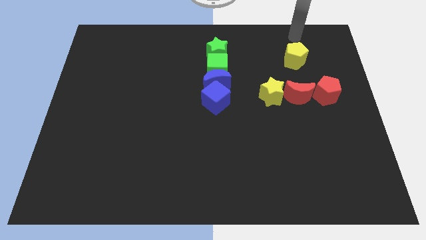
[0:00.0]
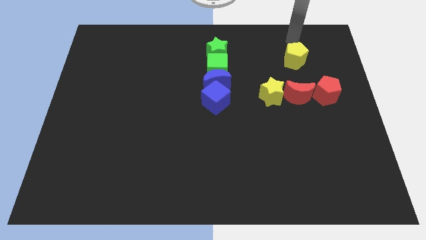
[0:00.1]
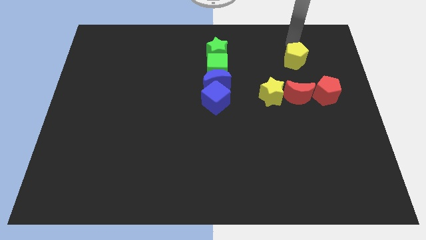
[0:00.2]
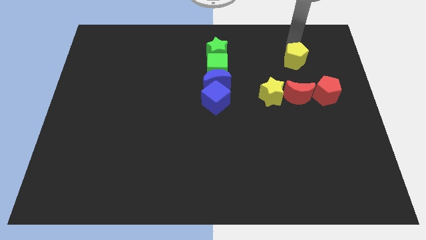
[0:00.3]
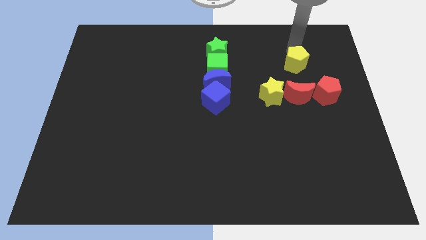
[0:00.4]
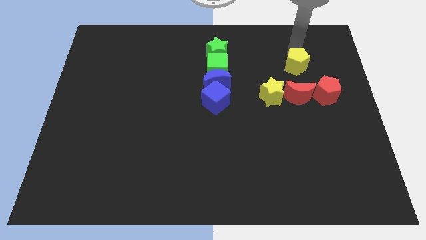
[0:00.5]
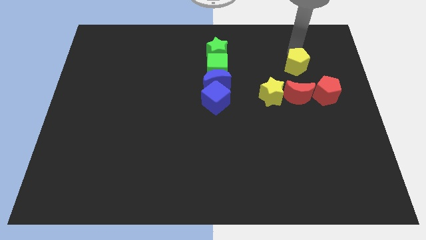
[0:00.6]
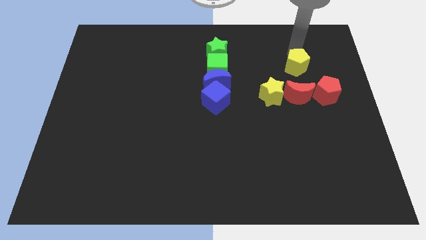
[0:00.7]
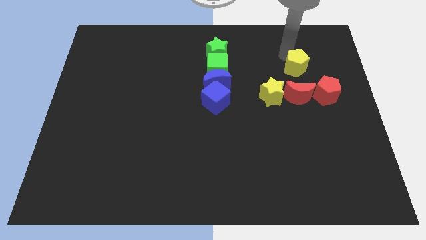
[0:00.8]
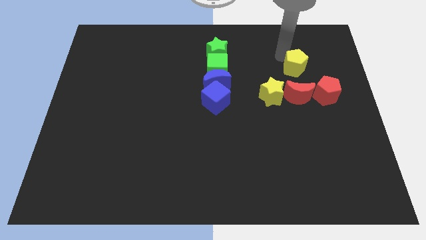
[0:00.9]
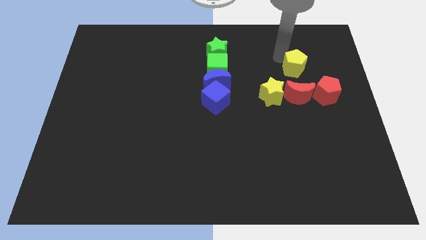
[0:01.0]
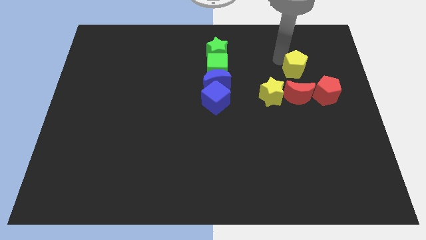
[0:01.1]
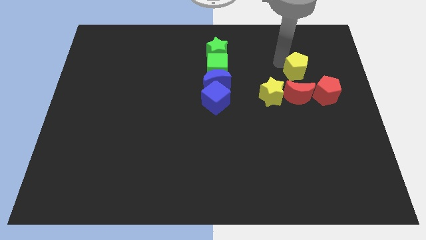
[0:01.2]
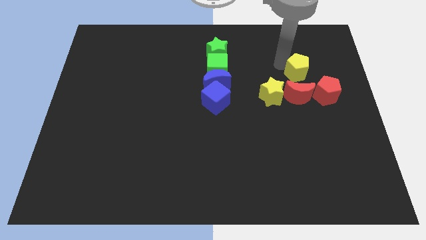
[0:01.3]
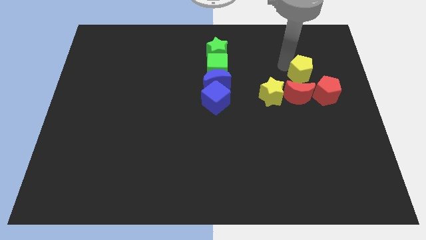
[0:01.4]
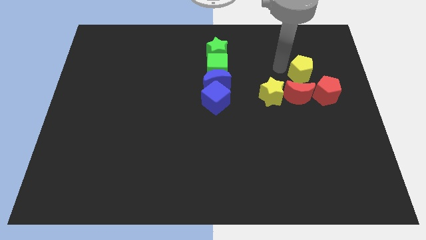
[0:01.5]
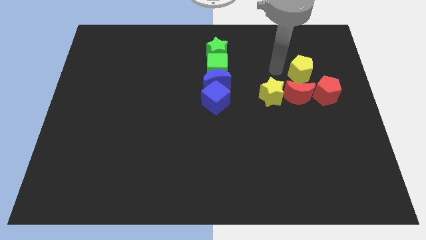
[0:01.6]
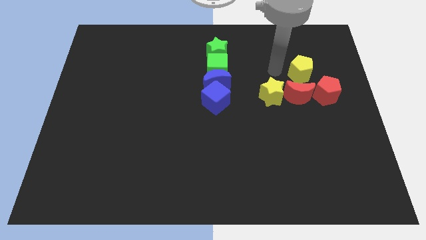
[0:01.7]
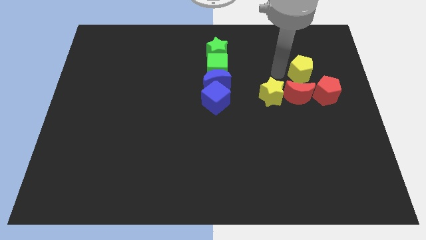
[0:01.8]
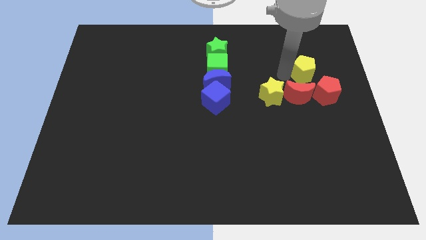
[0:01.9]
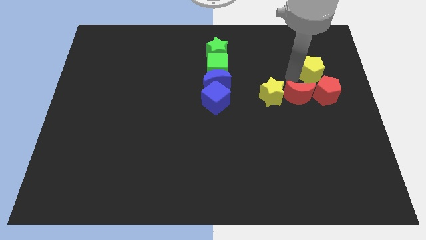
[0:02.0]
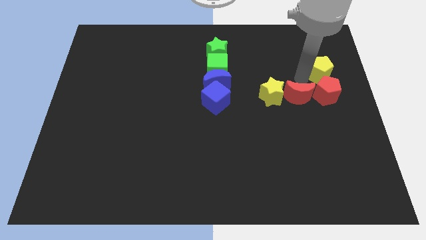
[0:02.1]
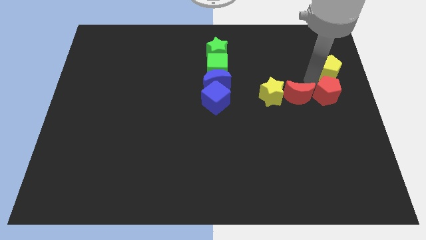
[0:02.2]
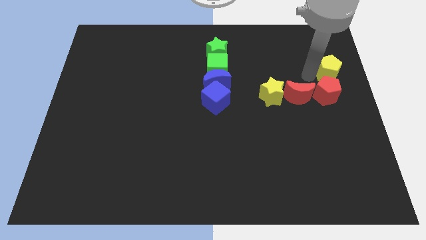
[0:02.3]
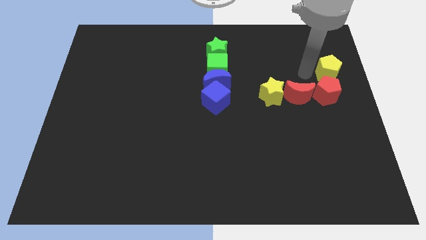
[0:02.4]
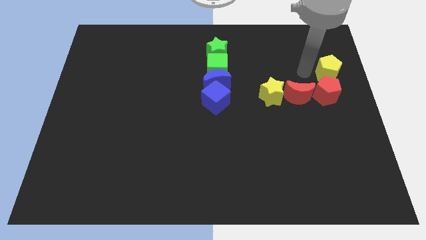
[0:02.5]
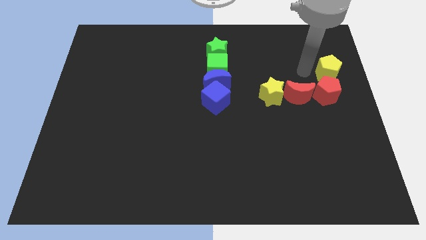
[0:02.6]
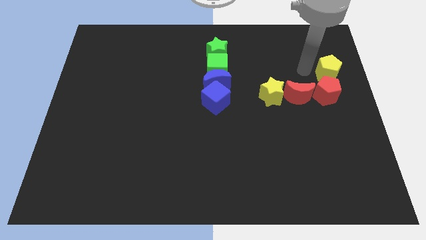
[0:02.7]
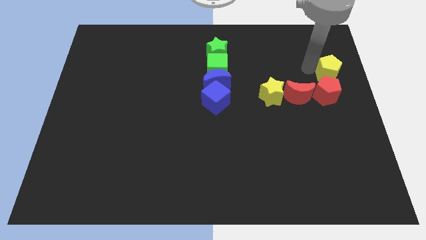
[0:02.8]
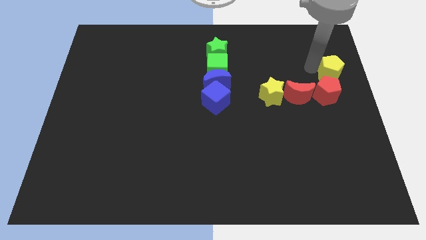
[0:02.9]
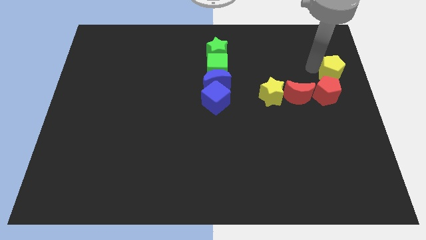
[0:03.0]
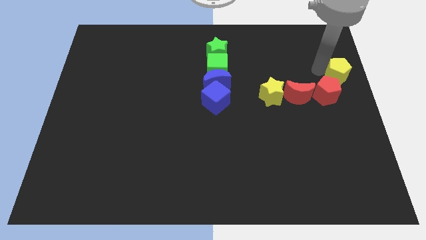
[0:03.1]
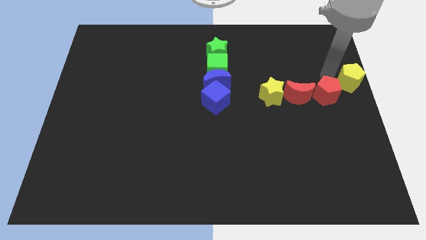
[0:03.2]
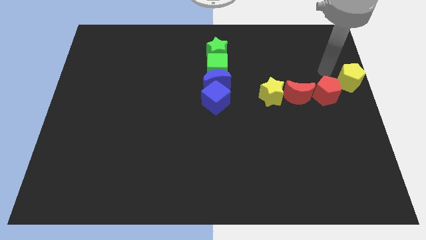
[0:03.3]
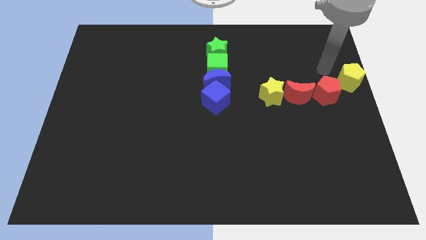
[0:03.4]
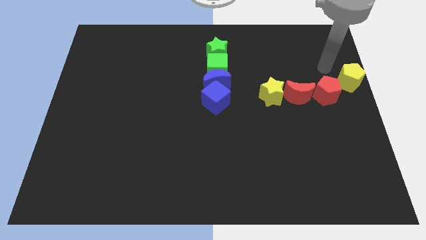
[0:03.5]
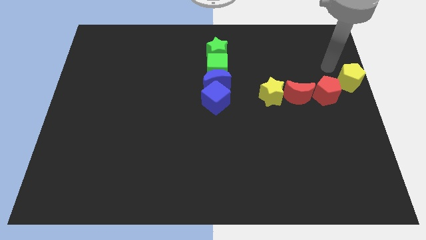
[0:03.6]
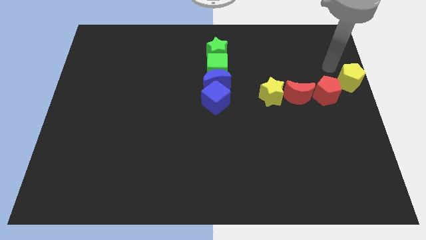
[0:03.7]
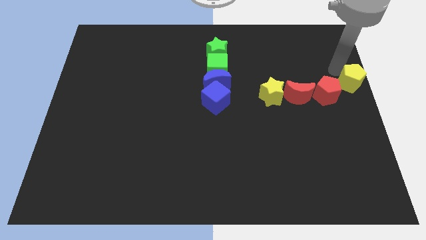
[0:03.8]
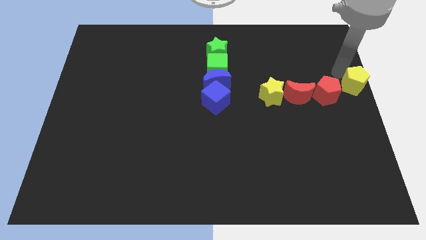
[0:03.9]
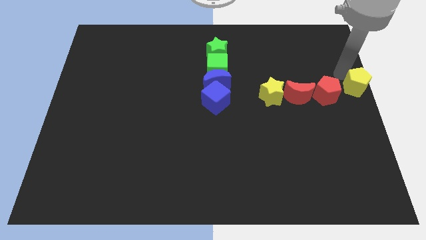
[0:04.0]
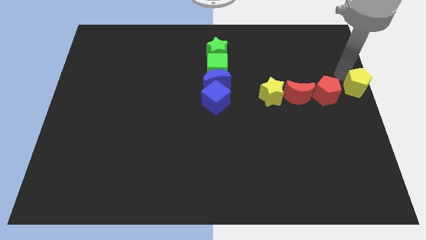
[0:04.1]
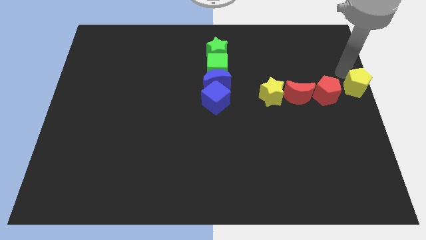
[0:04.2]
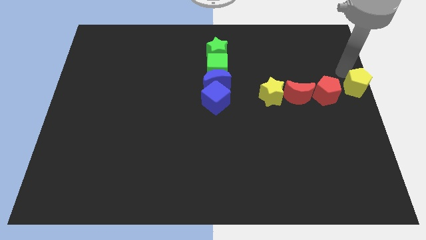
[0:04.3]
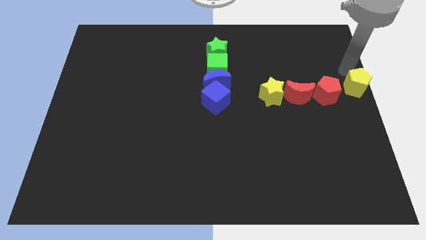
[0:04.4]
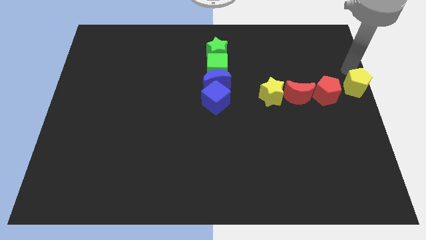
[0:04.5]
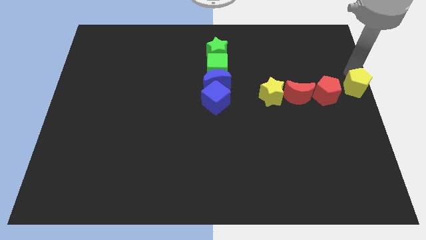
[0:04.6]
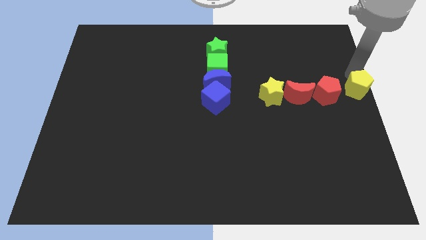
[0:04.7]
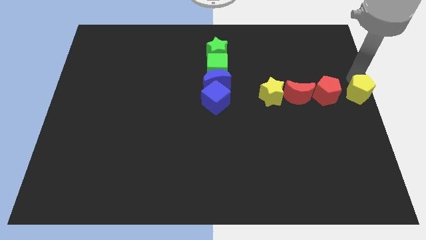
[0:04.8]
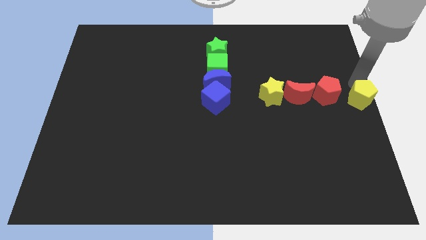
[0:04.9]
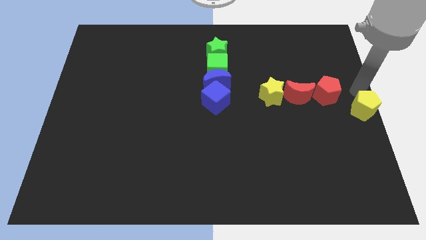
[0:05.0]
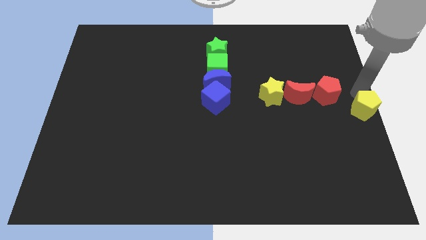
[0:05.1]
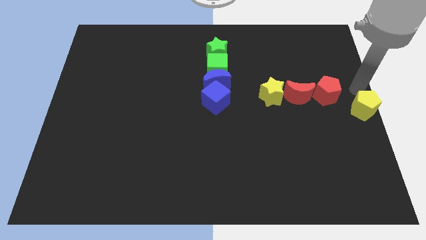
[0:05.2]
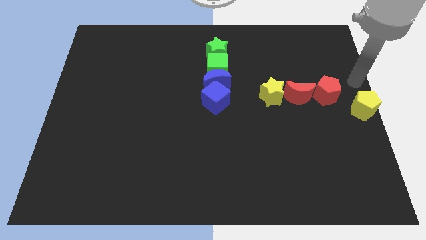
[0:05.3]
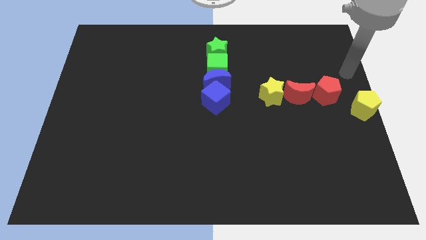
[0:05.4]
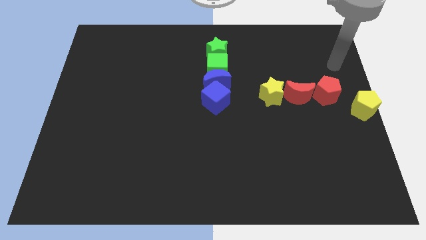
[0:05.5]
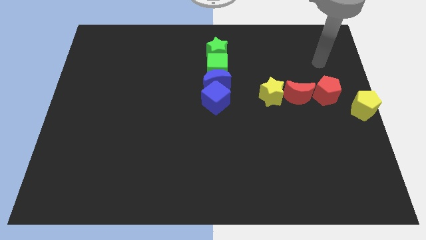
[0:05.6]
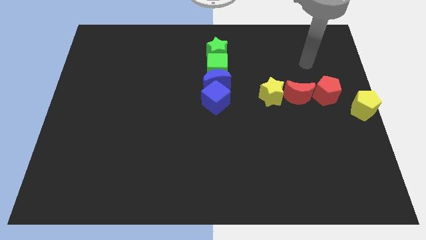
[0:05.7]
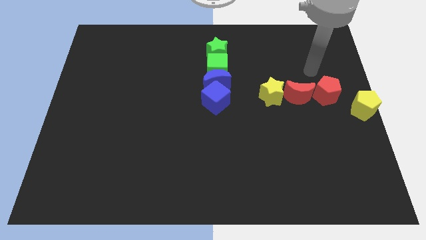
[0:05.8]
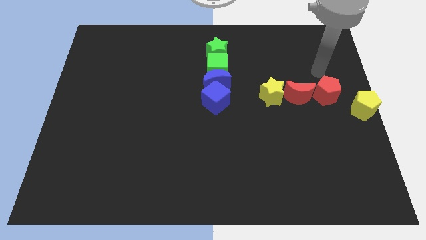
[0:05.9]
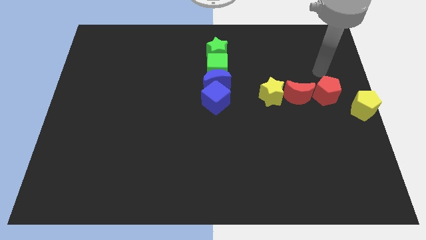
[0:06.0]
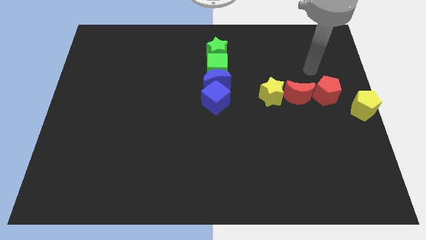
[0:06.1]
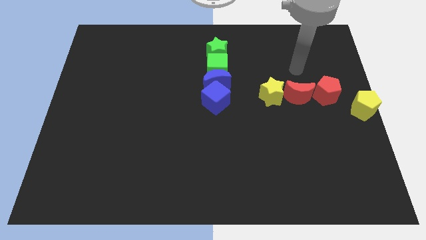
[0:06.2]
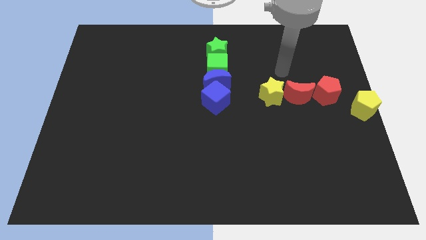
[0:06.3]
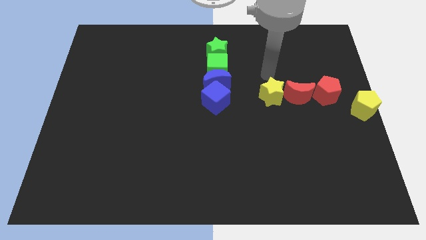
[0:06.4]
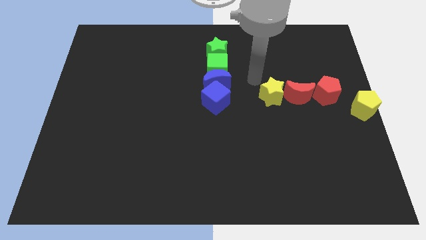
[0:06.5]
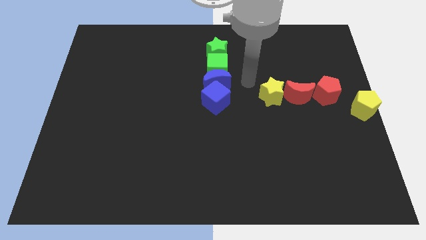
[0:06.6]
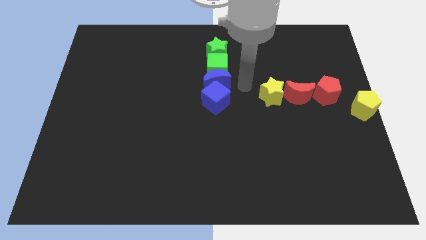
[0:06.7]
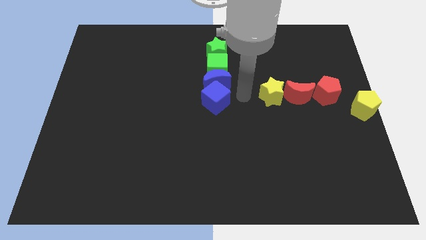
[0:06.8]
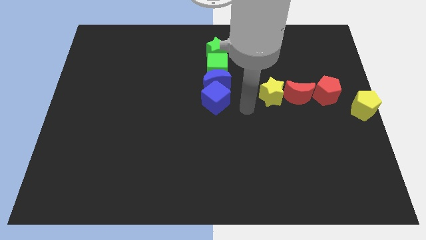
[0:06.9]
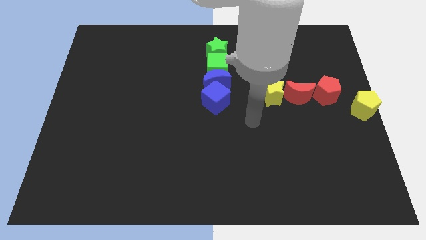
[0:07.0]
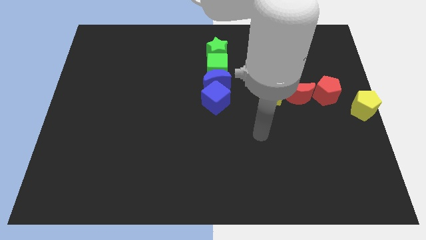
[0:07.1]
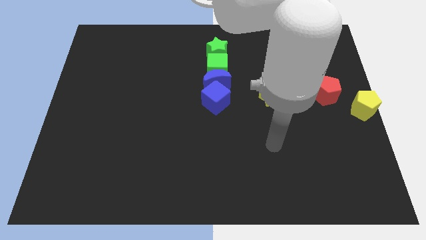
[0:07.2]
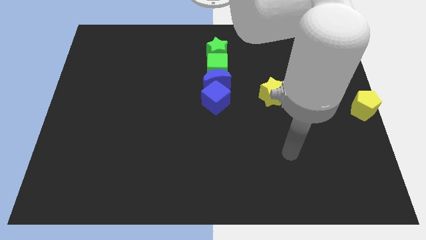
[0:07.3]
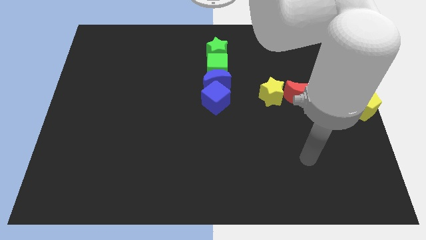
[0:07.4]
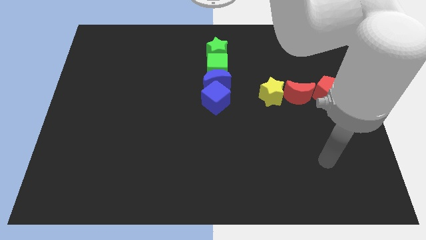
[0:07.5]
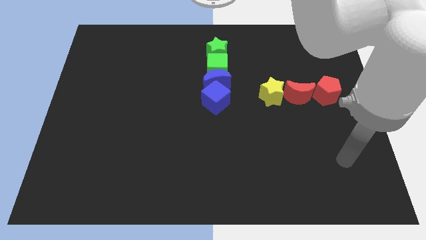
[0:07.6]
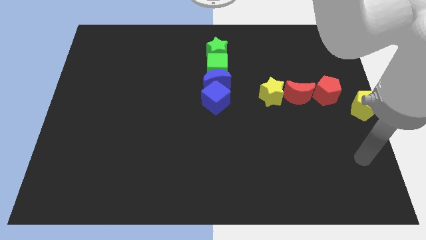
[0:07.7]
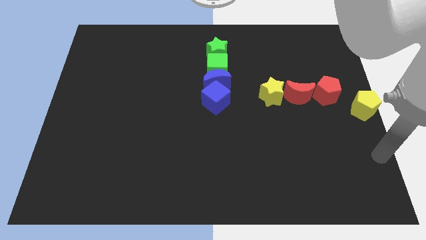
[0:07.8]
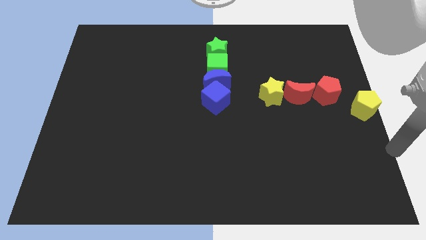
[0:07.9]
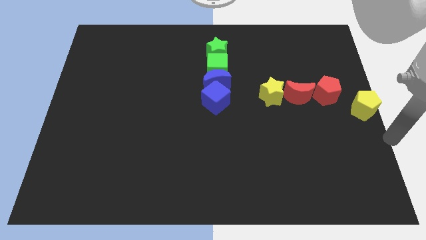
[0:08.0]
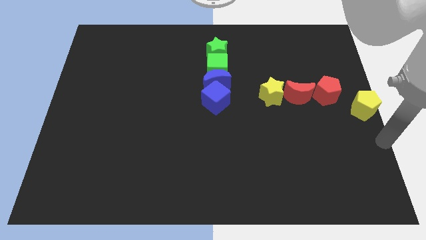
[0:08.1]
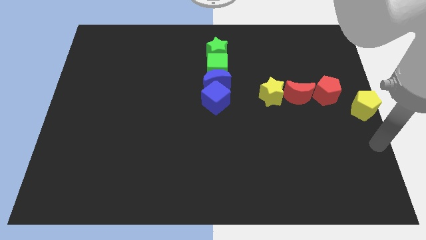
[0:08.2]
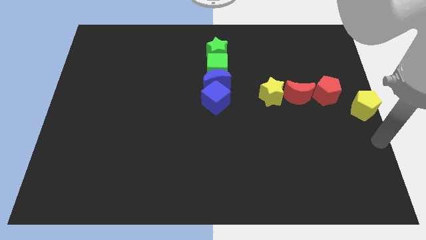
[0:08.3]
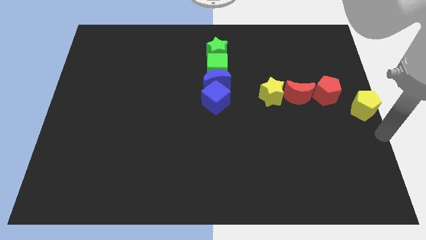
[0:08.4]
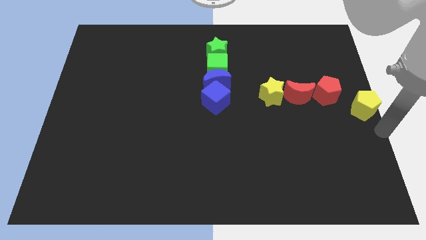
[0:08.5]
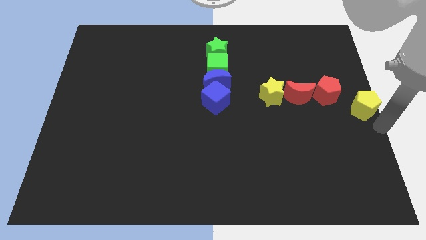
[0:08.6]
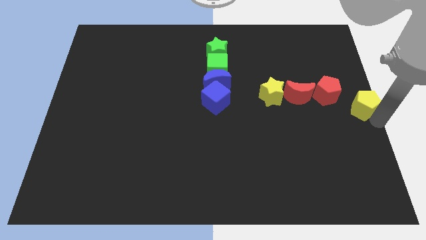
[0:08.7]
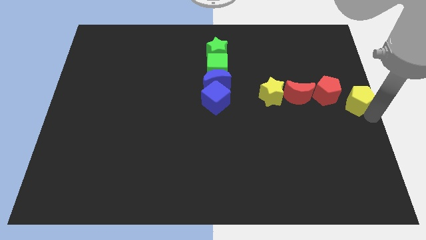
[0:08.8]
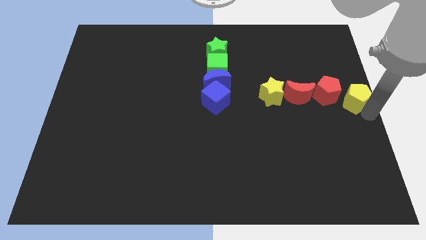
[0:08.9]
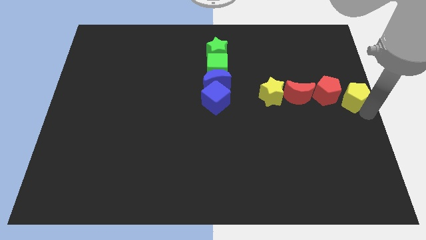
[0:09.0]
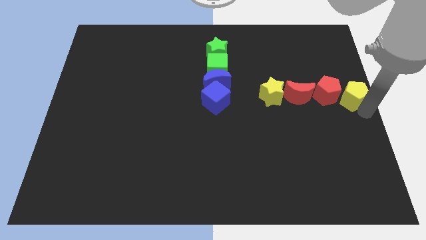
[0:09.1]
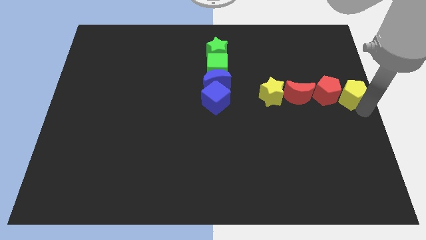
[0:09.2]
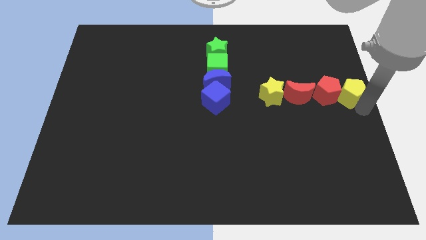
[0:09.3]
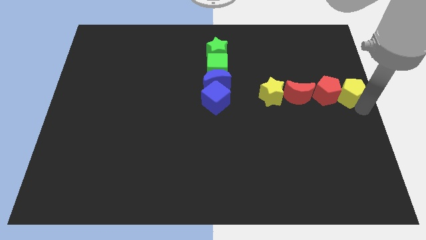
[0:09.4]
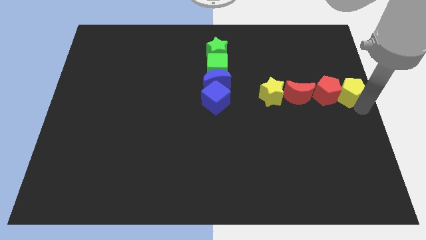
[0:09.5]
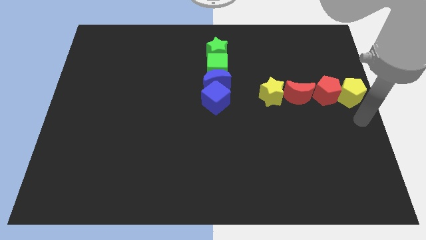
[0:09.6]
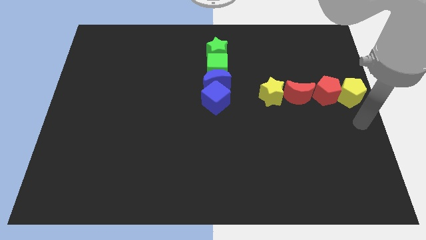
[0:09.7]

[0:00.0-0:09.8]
place the yellow pentagon beside the red pentagon
